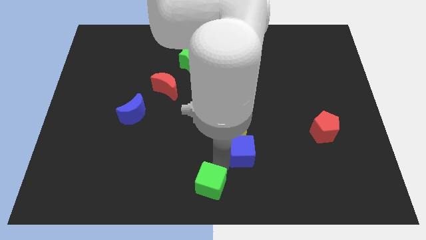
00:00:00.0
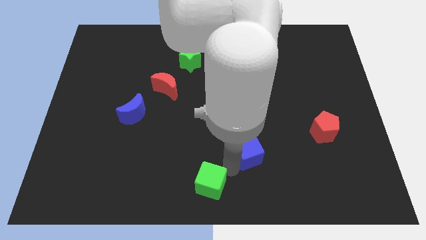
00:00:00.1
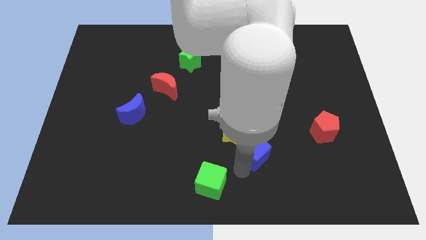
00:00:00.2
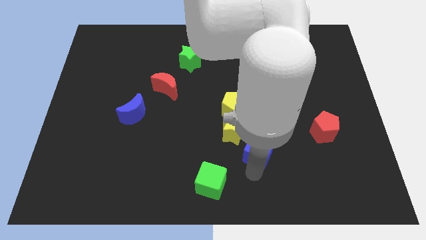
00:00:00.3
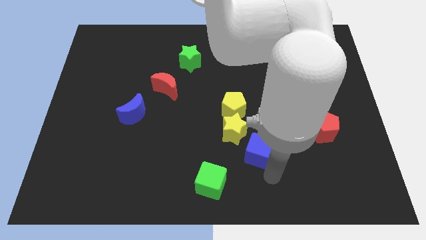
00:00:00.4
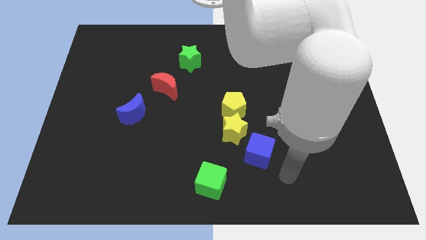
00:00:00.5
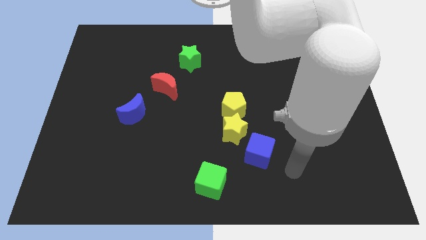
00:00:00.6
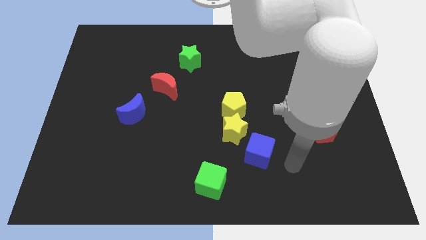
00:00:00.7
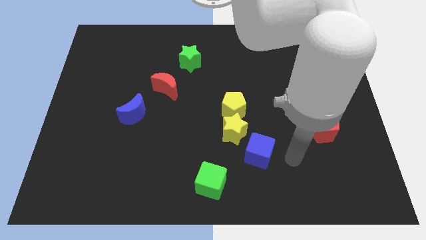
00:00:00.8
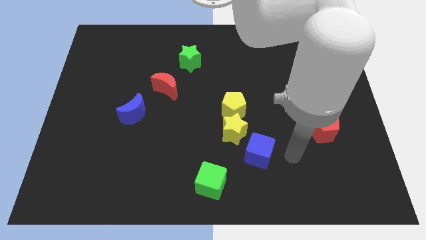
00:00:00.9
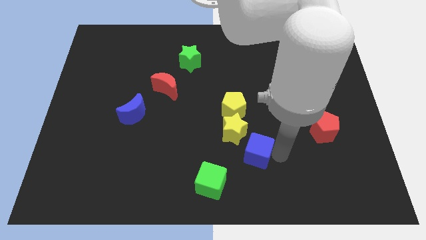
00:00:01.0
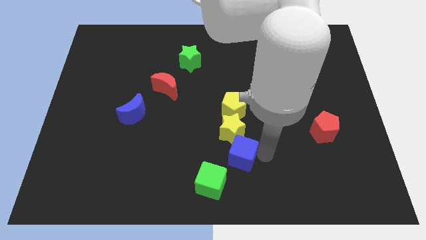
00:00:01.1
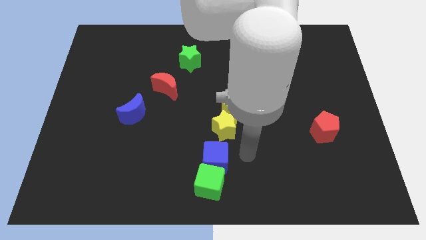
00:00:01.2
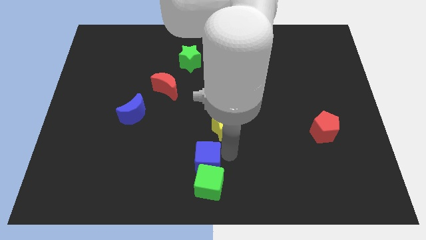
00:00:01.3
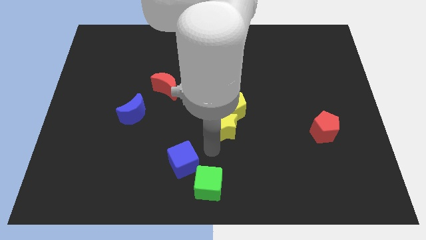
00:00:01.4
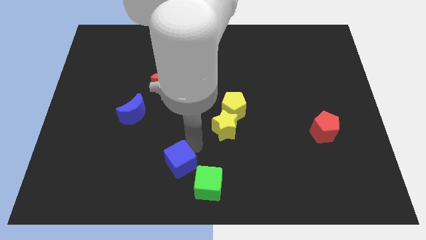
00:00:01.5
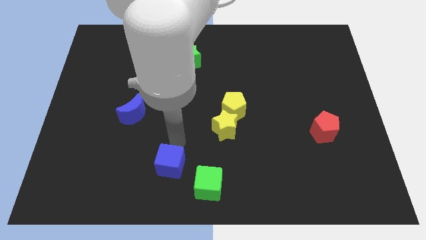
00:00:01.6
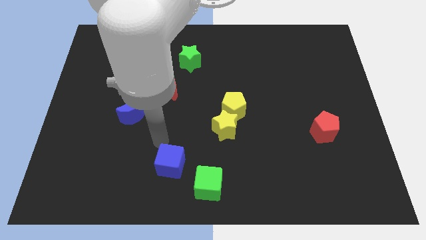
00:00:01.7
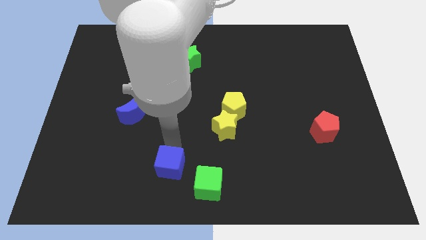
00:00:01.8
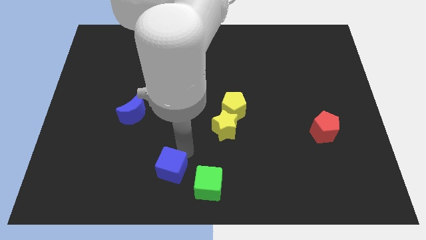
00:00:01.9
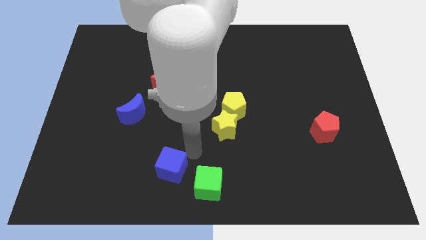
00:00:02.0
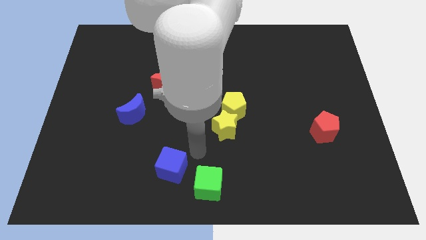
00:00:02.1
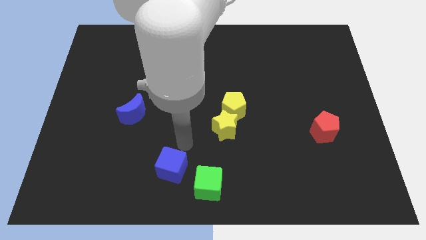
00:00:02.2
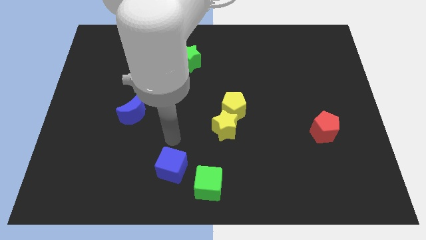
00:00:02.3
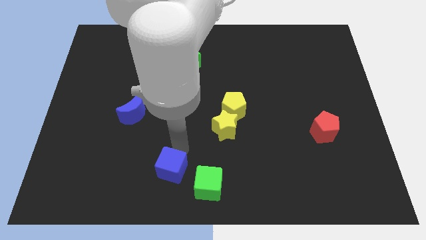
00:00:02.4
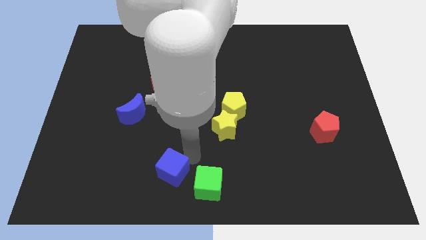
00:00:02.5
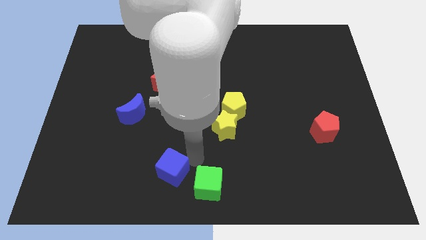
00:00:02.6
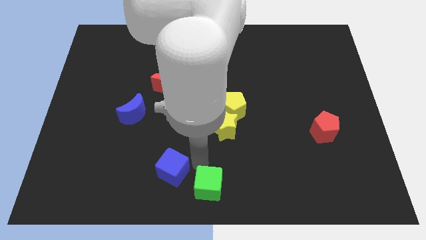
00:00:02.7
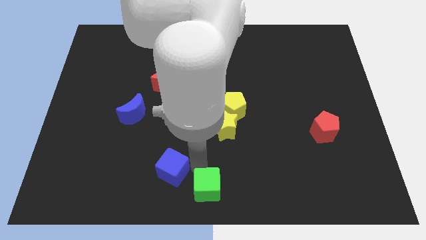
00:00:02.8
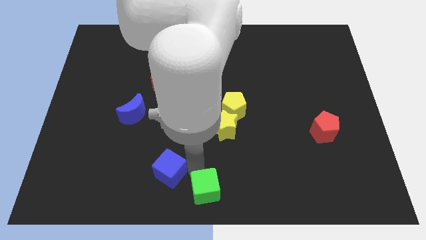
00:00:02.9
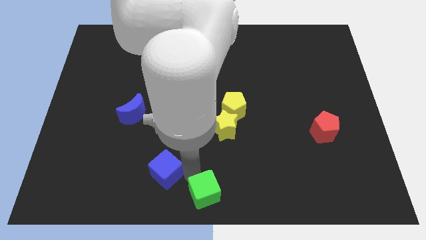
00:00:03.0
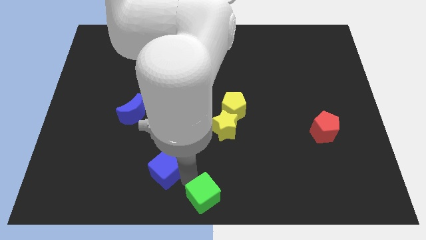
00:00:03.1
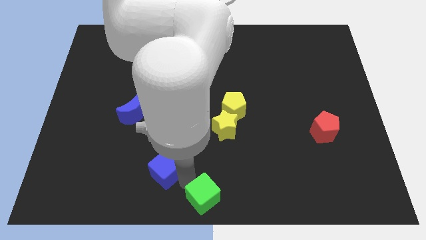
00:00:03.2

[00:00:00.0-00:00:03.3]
place your arm in between the blue cube and green cube

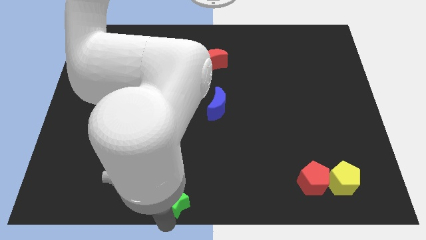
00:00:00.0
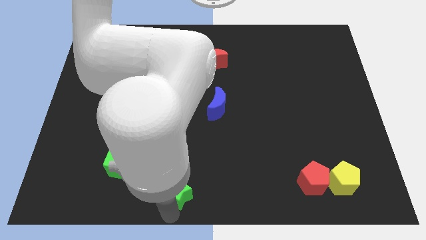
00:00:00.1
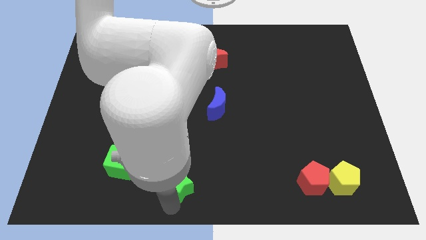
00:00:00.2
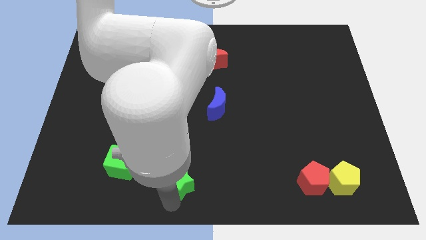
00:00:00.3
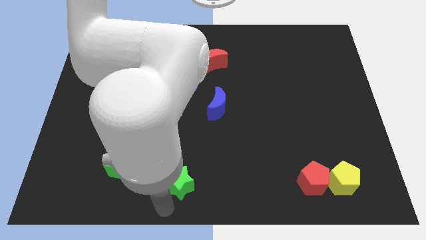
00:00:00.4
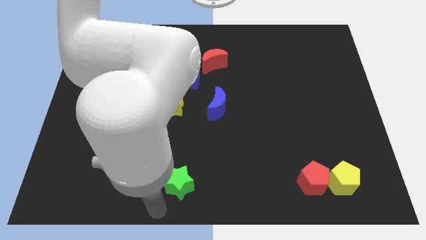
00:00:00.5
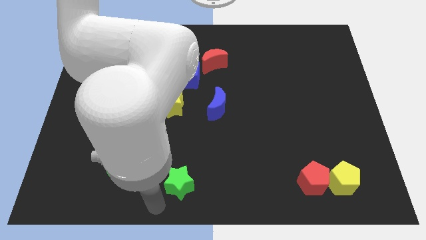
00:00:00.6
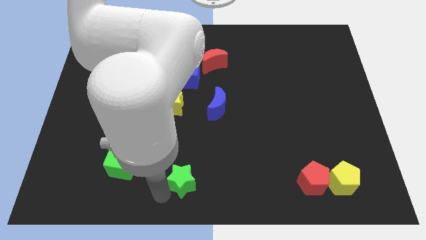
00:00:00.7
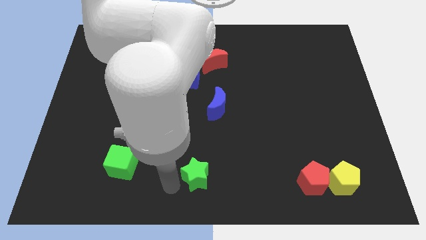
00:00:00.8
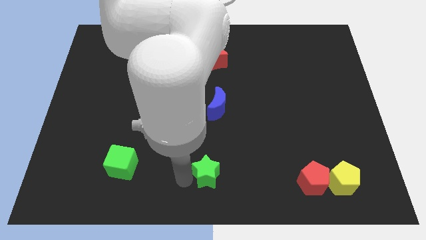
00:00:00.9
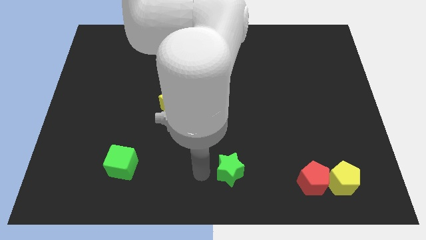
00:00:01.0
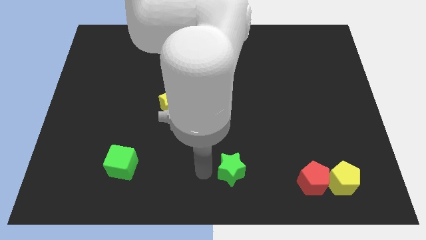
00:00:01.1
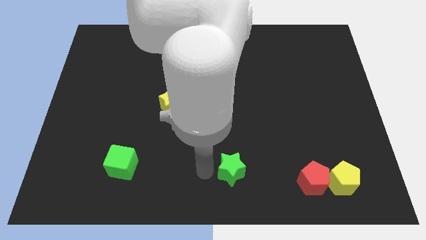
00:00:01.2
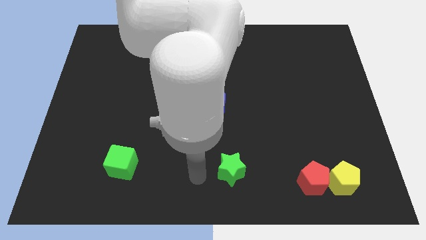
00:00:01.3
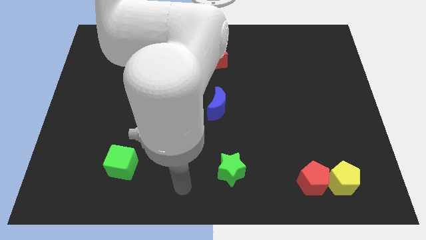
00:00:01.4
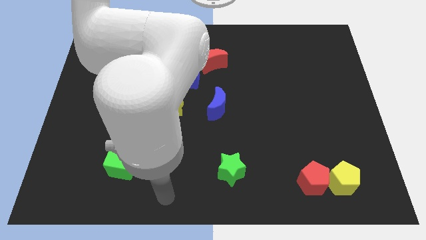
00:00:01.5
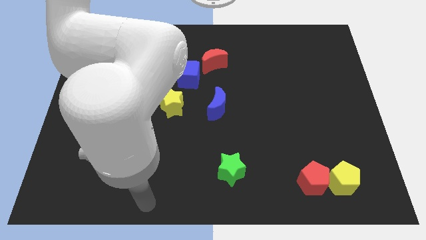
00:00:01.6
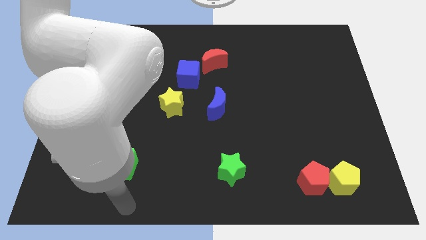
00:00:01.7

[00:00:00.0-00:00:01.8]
push the green star vertically to the green cube

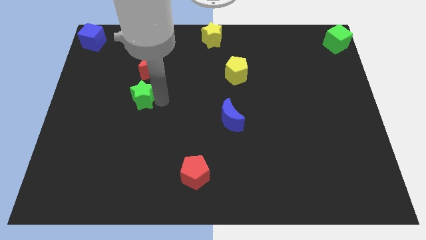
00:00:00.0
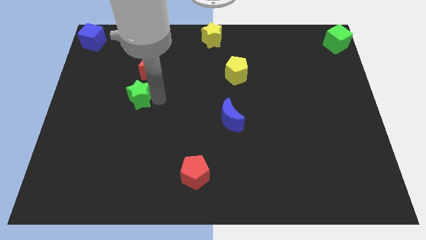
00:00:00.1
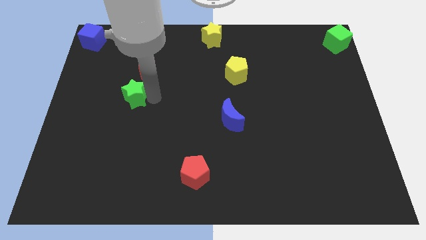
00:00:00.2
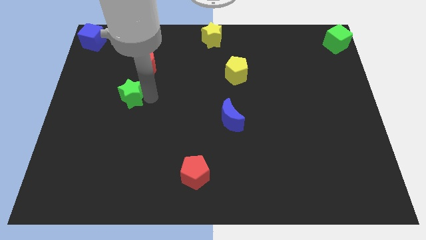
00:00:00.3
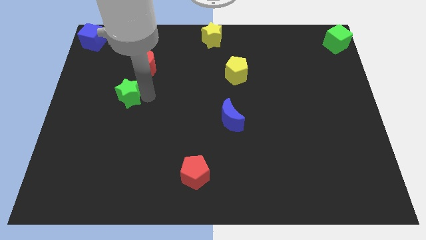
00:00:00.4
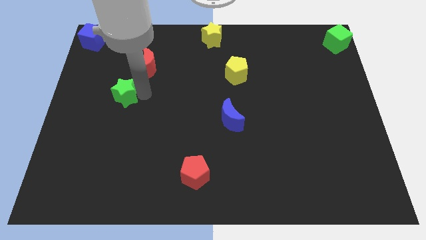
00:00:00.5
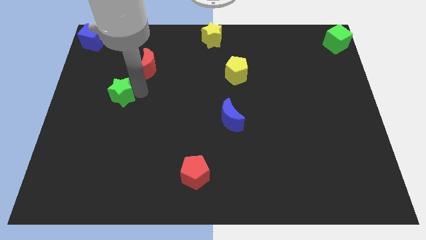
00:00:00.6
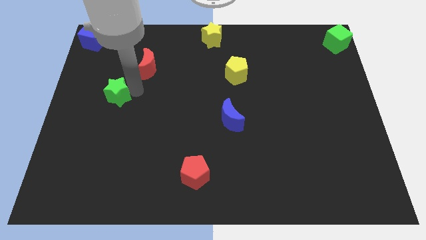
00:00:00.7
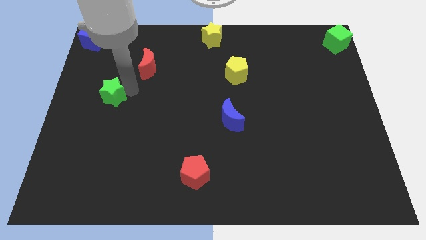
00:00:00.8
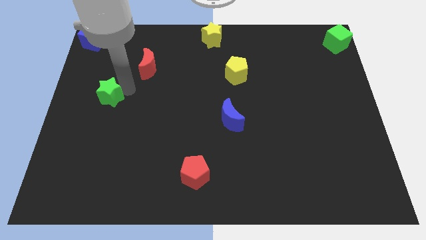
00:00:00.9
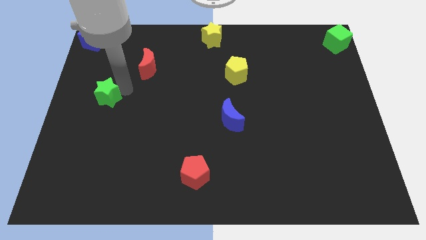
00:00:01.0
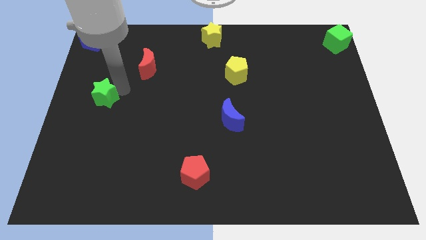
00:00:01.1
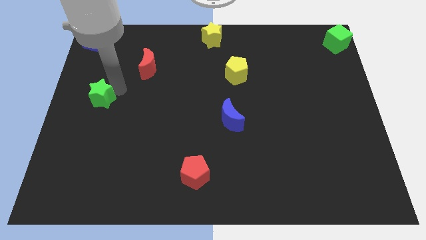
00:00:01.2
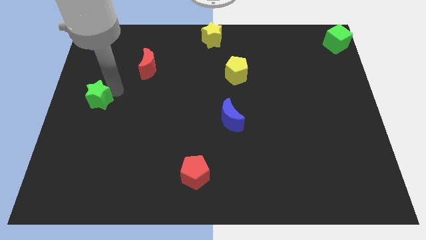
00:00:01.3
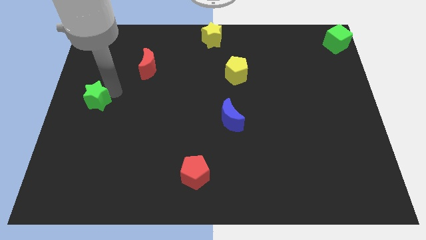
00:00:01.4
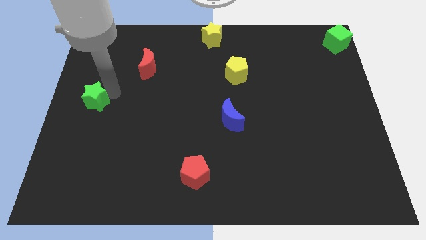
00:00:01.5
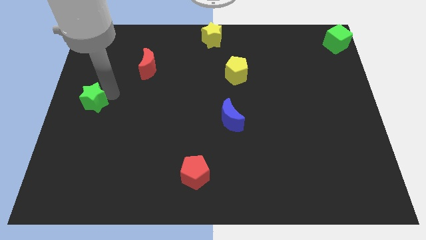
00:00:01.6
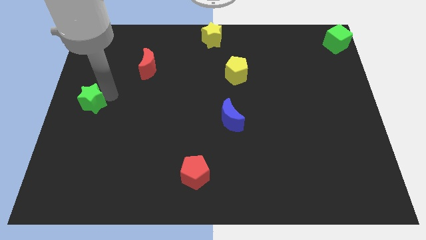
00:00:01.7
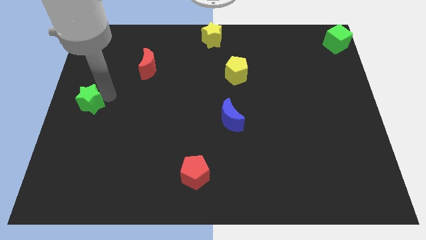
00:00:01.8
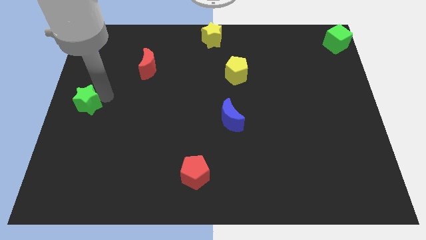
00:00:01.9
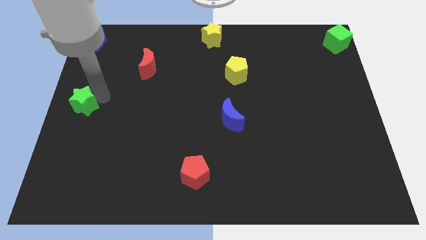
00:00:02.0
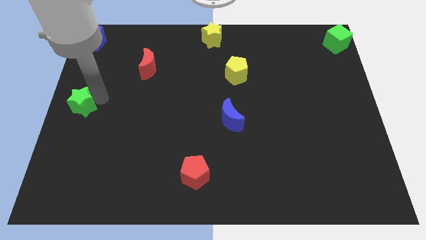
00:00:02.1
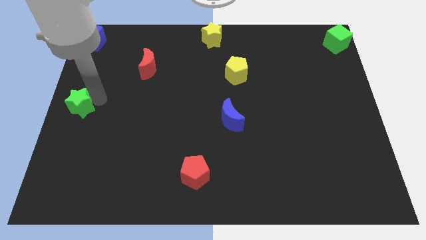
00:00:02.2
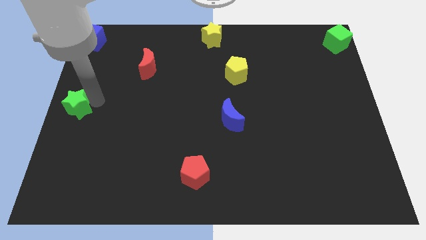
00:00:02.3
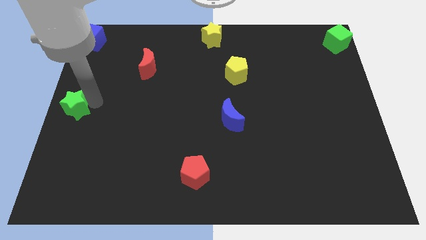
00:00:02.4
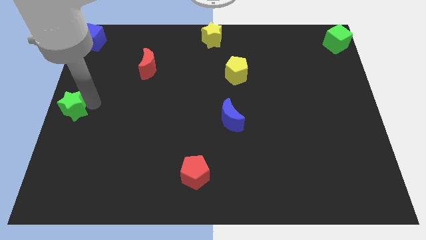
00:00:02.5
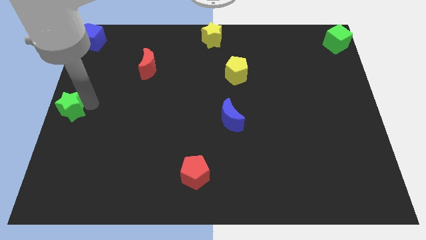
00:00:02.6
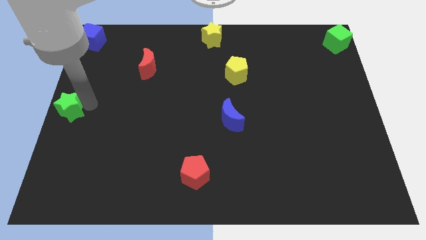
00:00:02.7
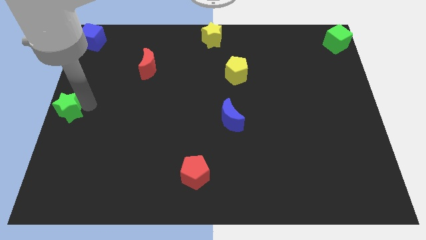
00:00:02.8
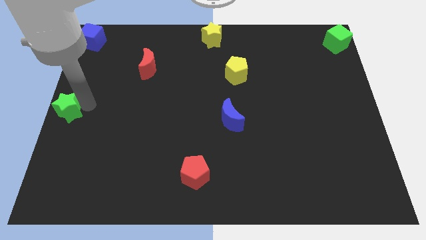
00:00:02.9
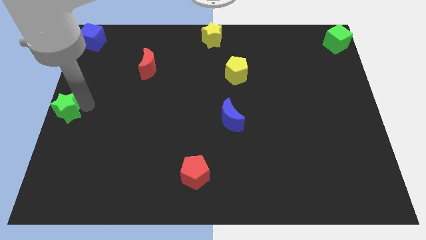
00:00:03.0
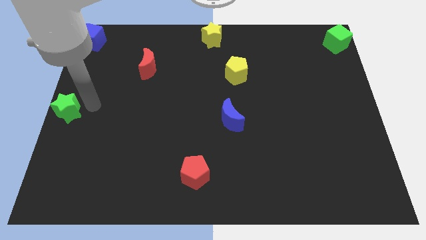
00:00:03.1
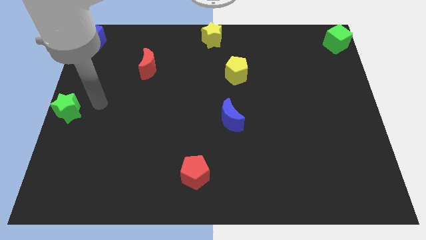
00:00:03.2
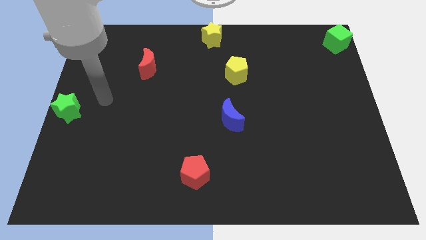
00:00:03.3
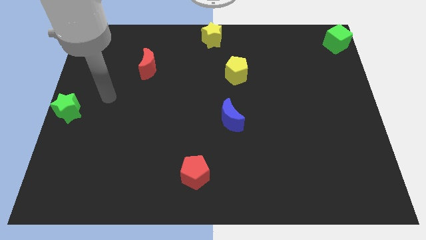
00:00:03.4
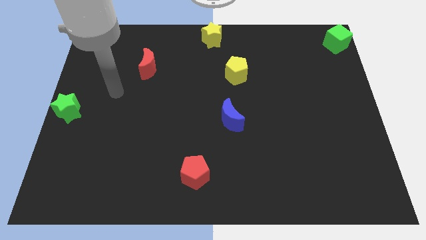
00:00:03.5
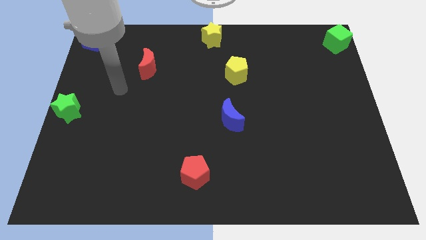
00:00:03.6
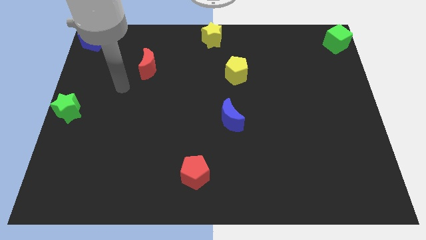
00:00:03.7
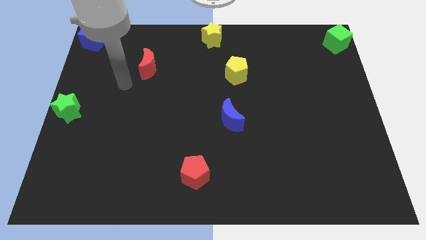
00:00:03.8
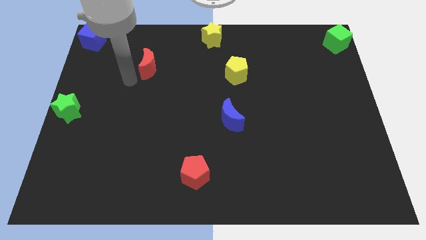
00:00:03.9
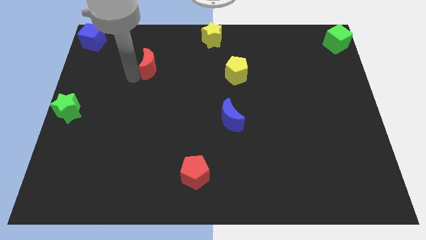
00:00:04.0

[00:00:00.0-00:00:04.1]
move the green star to left middle of the board
